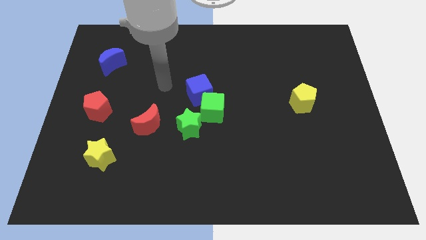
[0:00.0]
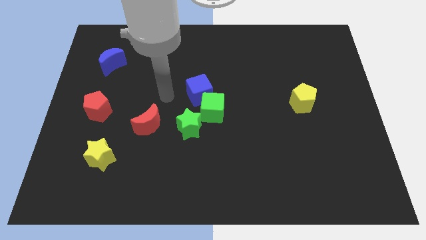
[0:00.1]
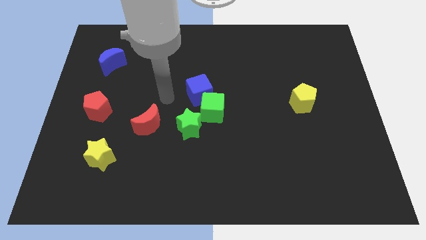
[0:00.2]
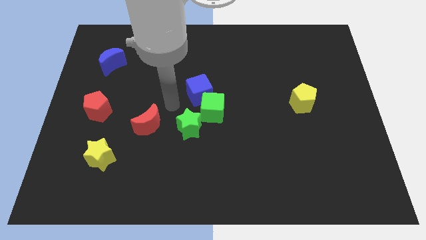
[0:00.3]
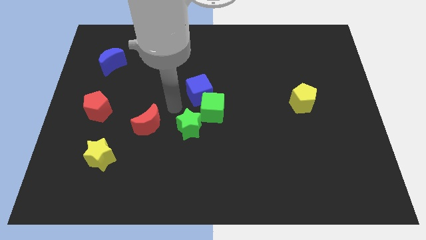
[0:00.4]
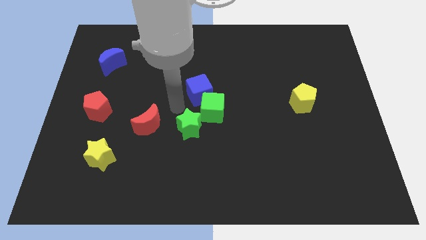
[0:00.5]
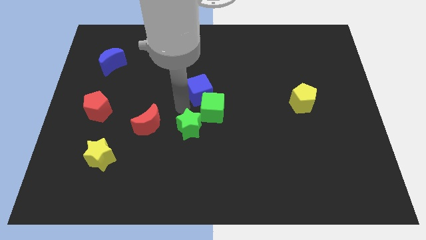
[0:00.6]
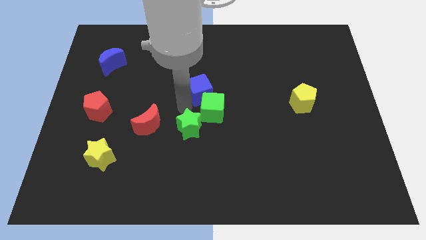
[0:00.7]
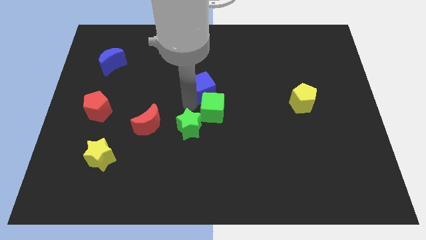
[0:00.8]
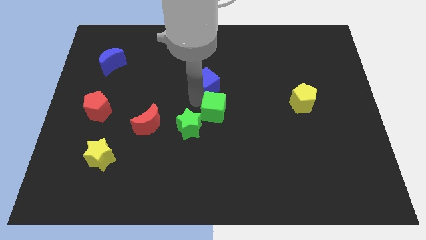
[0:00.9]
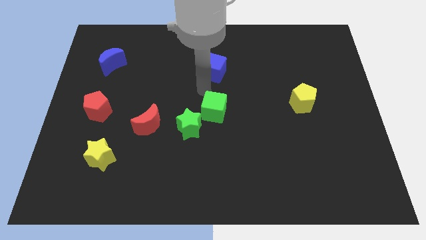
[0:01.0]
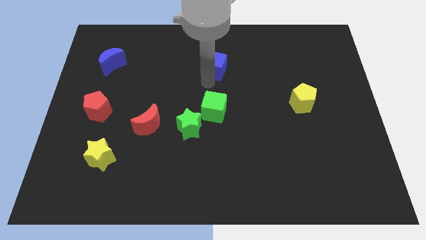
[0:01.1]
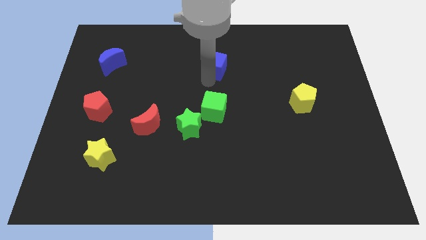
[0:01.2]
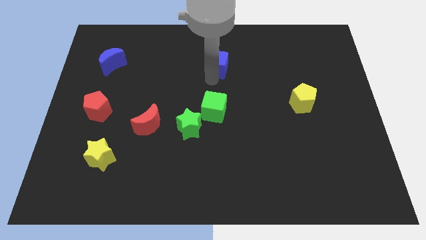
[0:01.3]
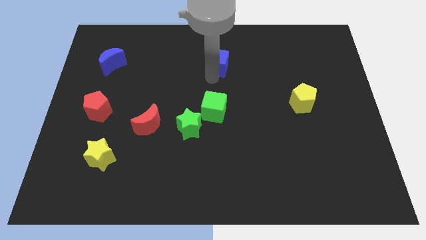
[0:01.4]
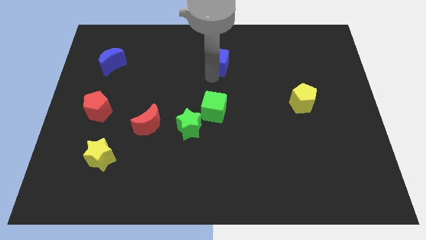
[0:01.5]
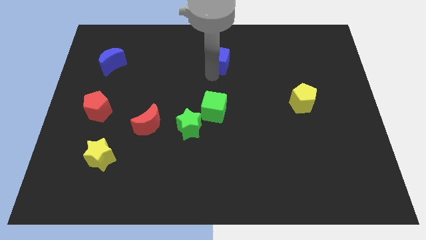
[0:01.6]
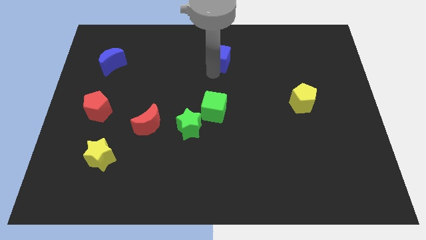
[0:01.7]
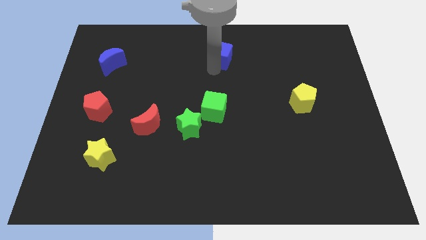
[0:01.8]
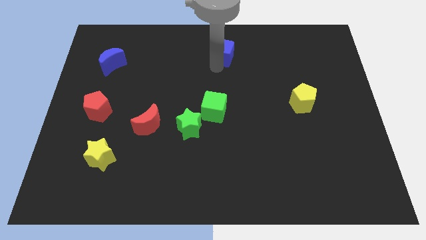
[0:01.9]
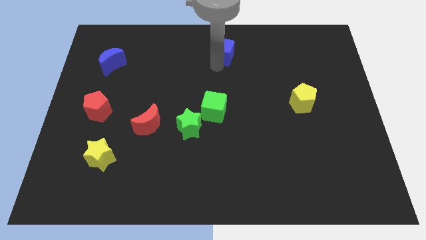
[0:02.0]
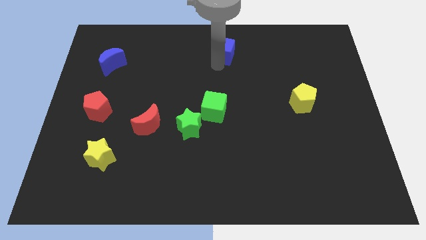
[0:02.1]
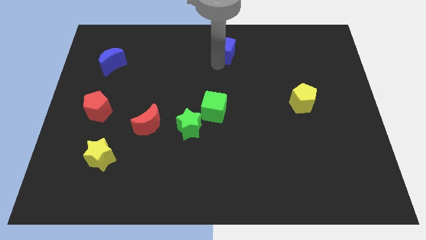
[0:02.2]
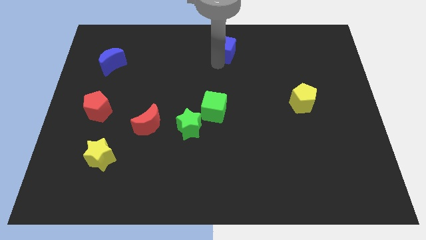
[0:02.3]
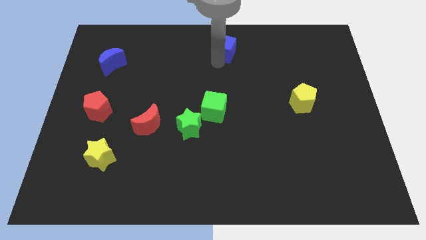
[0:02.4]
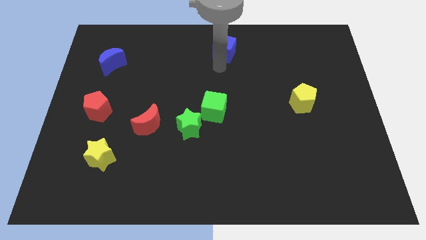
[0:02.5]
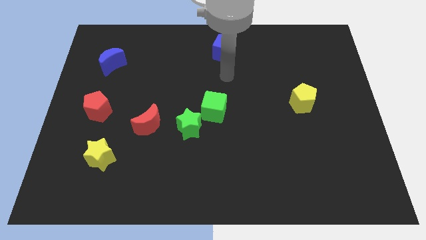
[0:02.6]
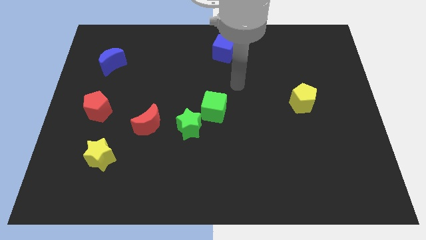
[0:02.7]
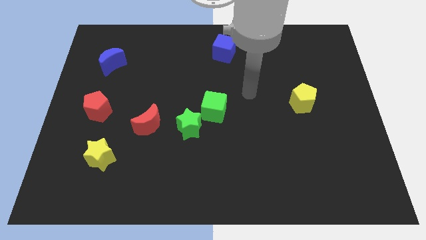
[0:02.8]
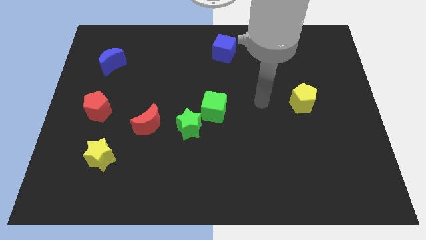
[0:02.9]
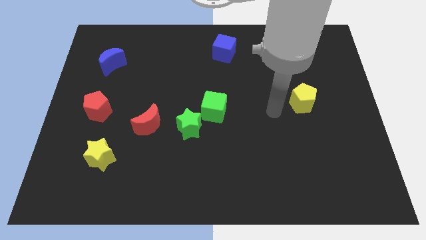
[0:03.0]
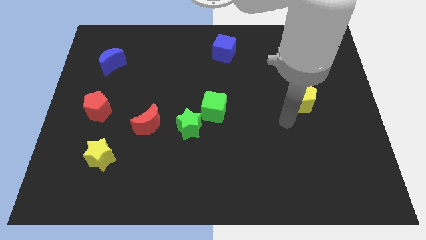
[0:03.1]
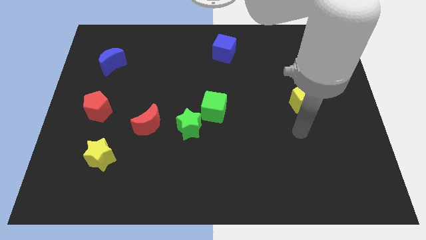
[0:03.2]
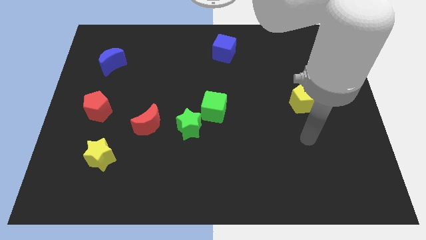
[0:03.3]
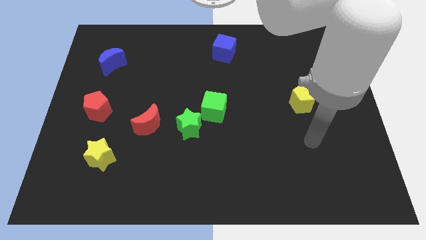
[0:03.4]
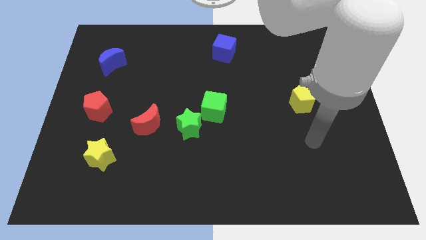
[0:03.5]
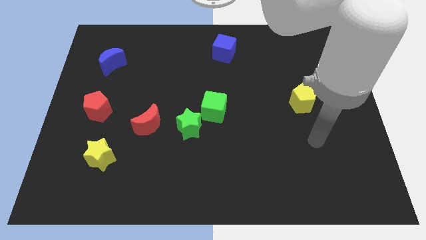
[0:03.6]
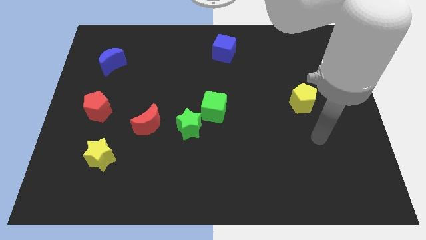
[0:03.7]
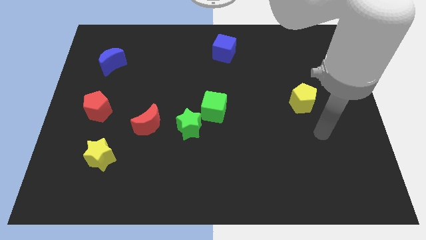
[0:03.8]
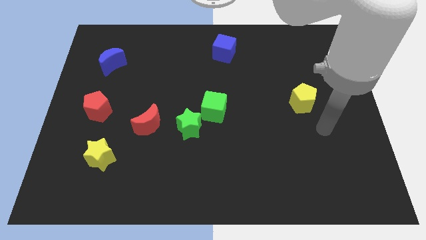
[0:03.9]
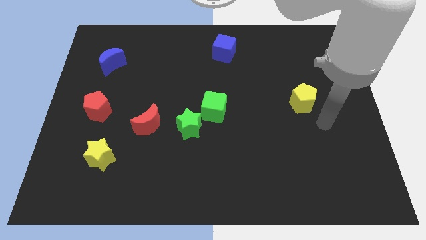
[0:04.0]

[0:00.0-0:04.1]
move the blue cube to the top center of the board

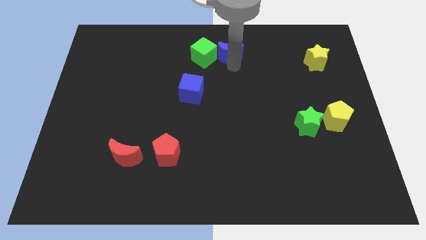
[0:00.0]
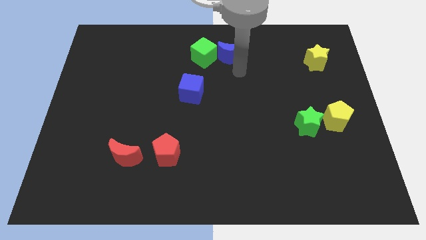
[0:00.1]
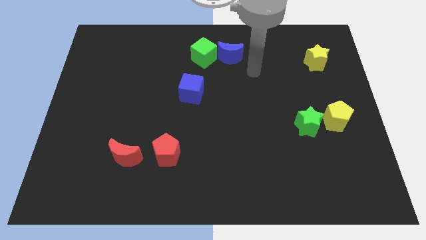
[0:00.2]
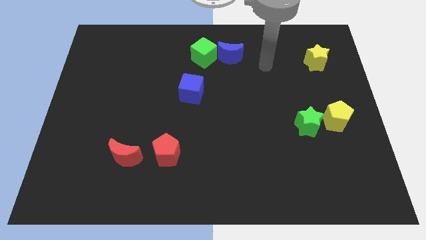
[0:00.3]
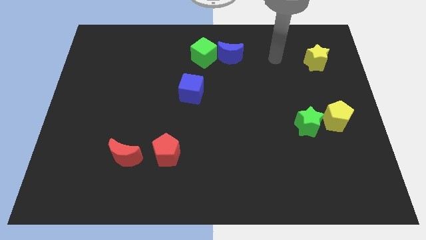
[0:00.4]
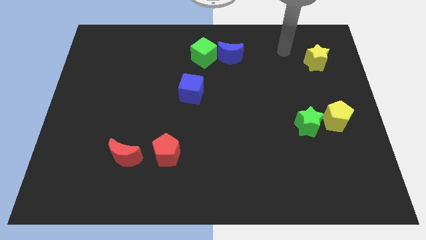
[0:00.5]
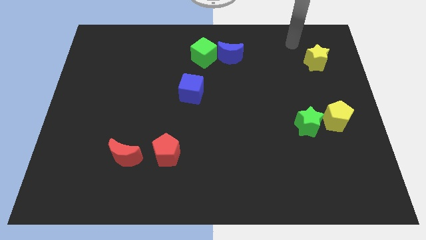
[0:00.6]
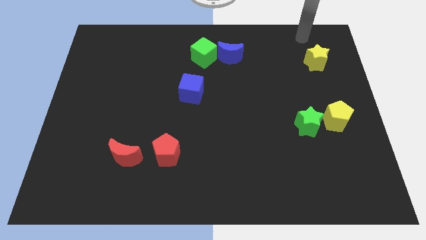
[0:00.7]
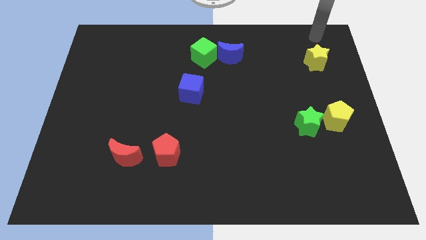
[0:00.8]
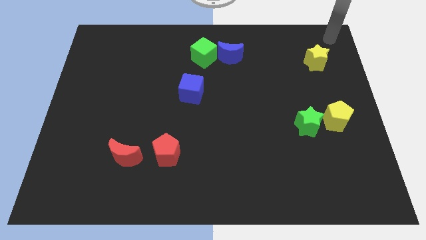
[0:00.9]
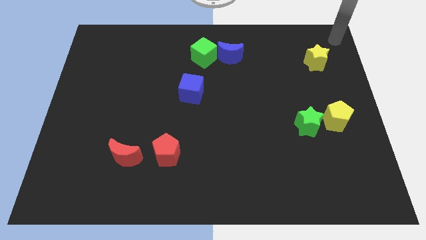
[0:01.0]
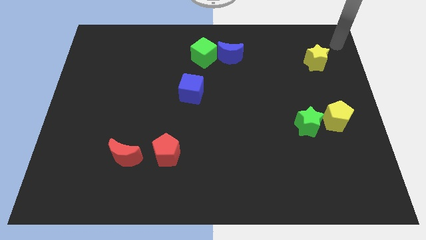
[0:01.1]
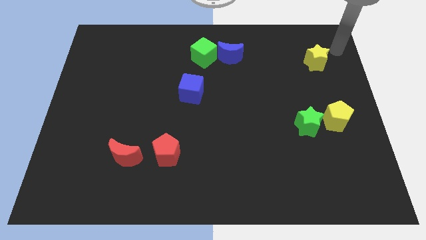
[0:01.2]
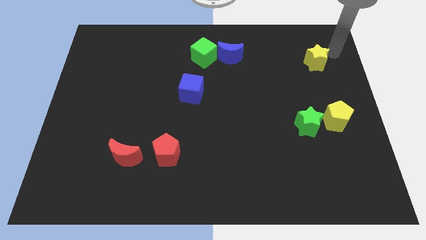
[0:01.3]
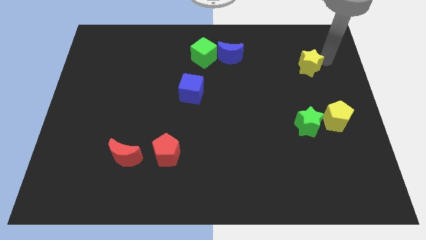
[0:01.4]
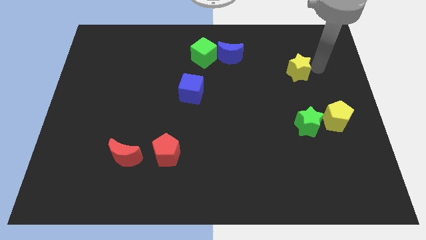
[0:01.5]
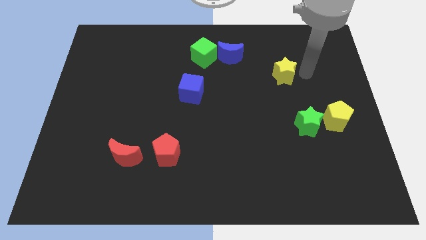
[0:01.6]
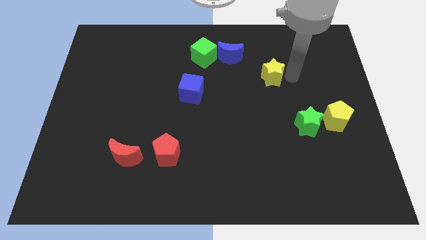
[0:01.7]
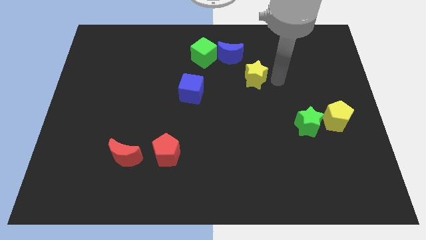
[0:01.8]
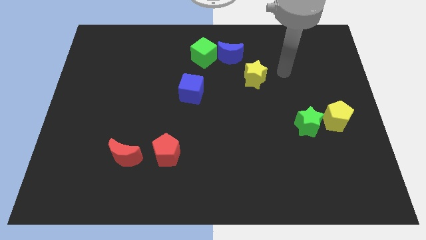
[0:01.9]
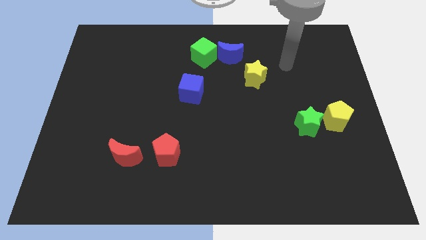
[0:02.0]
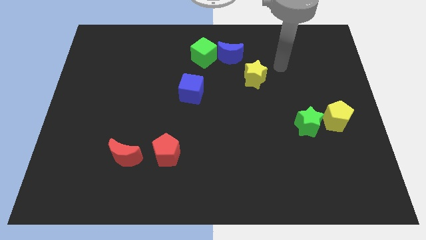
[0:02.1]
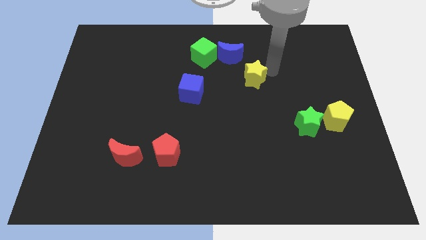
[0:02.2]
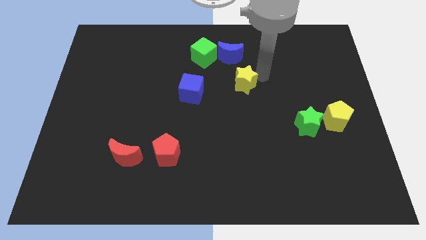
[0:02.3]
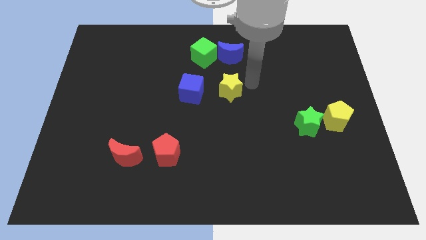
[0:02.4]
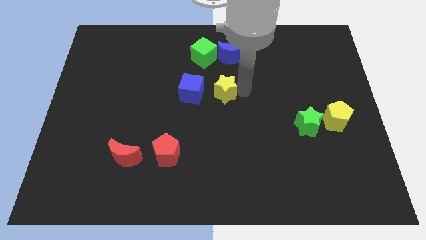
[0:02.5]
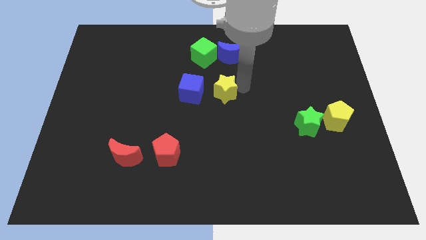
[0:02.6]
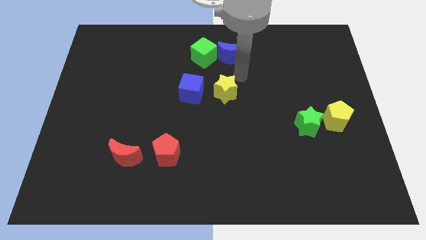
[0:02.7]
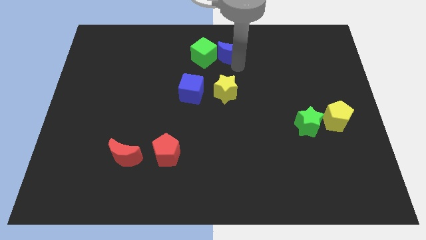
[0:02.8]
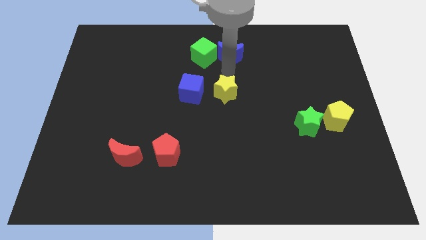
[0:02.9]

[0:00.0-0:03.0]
move yellow star right to the blue cube

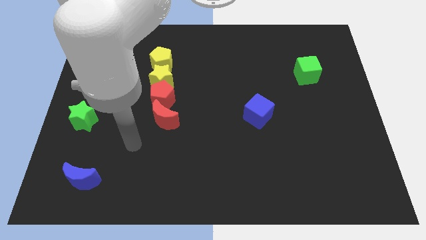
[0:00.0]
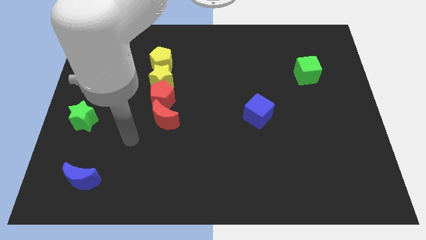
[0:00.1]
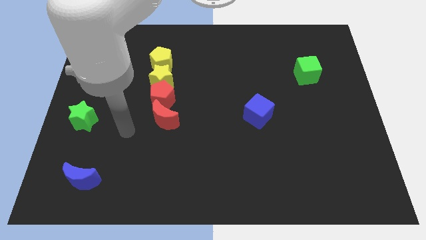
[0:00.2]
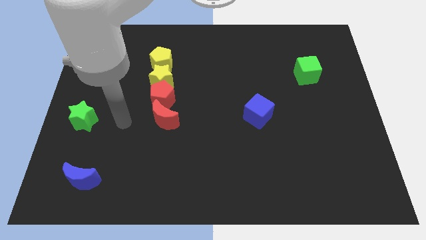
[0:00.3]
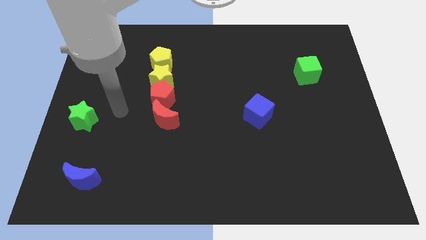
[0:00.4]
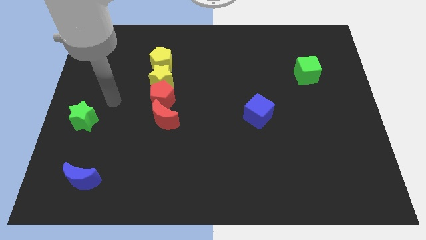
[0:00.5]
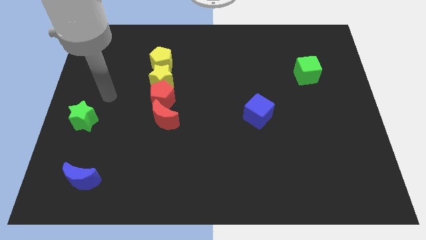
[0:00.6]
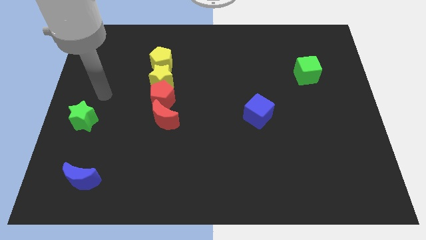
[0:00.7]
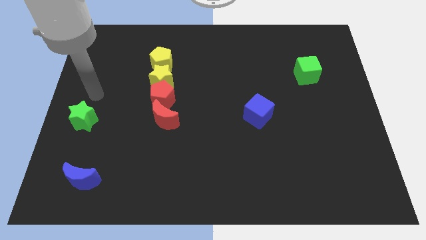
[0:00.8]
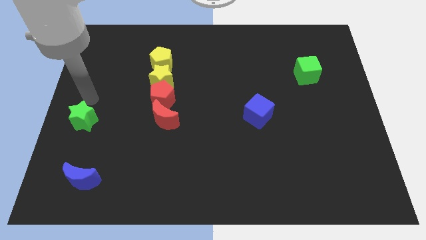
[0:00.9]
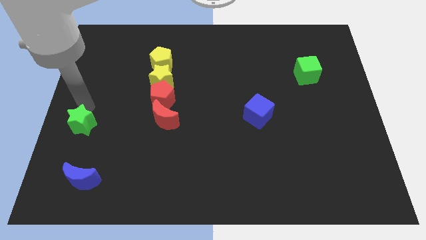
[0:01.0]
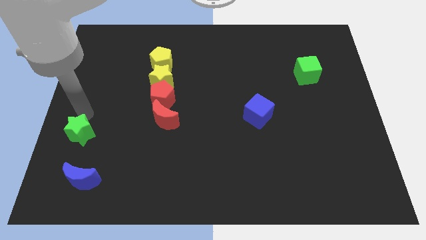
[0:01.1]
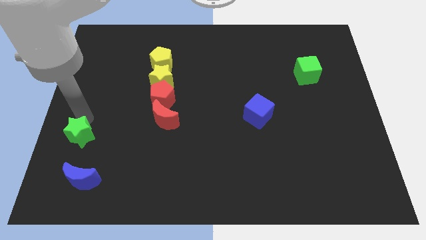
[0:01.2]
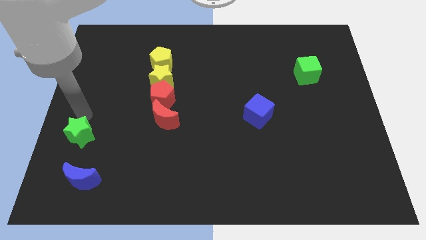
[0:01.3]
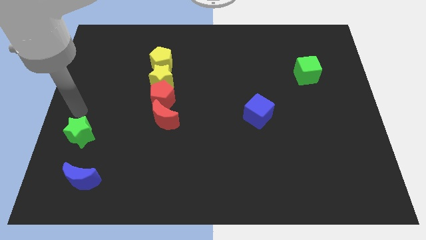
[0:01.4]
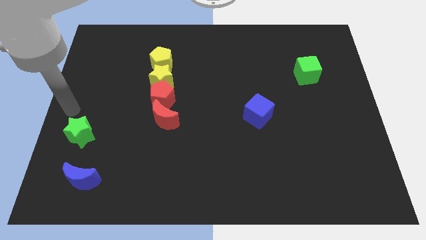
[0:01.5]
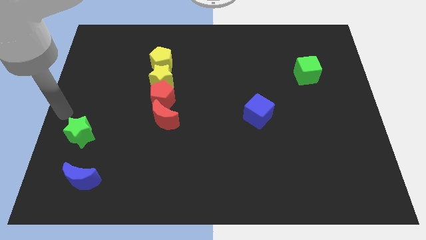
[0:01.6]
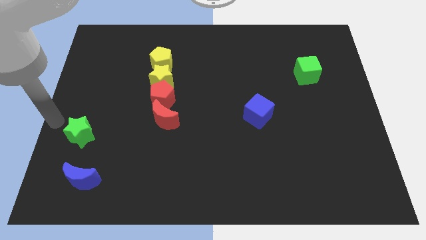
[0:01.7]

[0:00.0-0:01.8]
push the green star towards the blue semi circle
